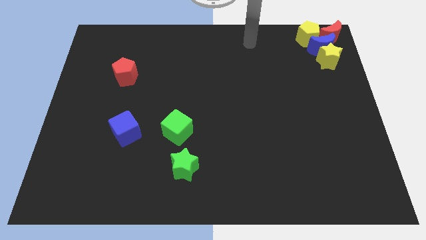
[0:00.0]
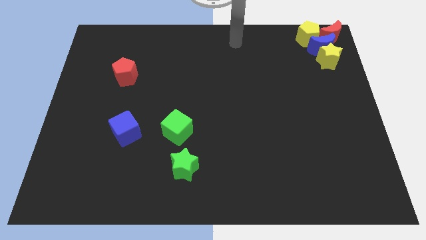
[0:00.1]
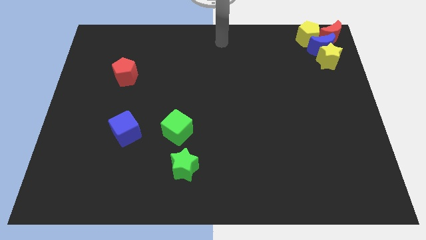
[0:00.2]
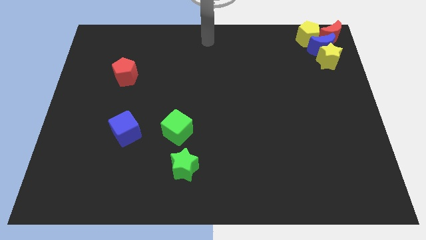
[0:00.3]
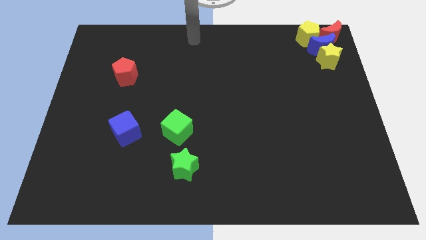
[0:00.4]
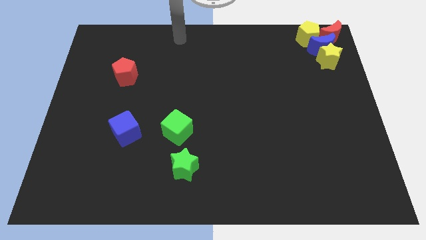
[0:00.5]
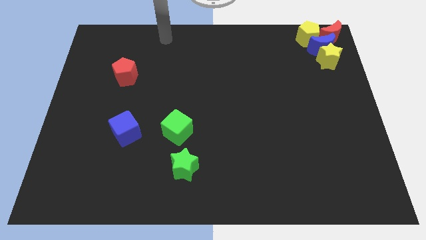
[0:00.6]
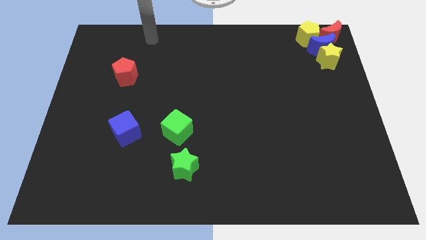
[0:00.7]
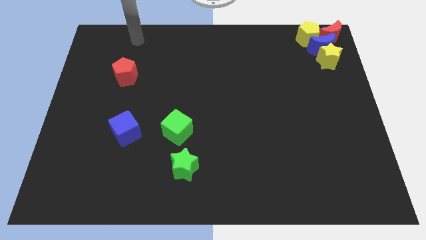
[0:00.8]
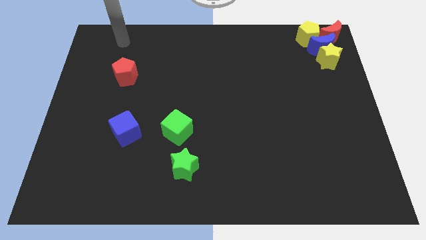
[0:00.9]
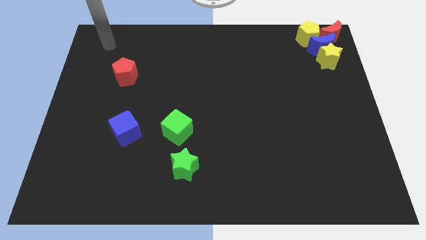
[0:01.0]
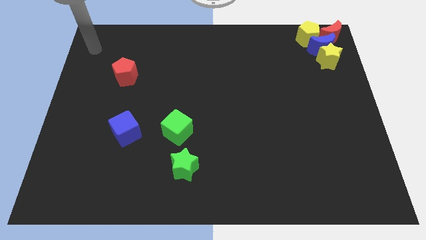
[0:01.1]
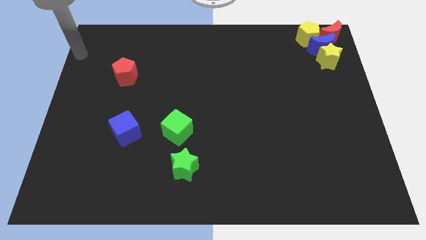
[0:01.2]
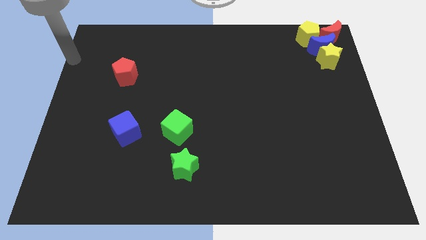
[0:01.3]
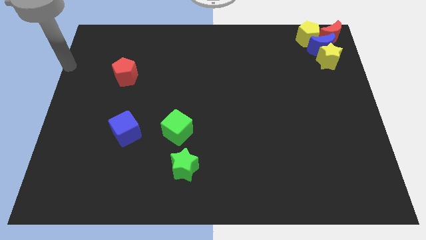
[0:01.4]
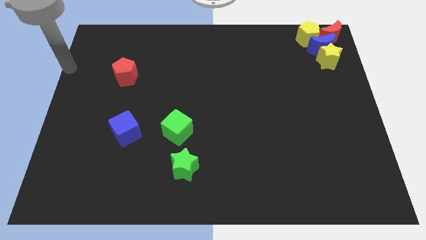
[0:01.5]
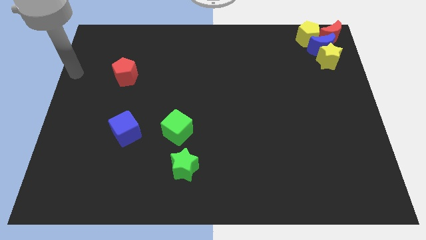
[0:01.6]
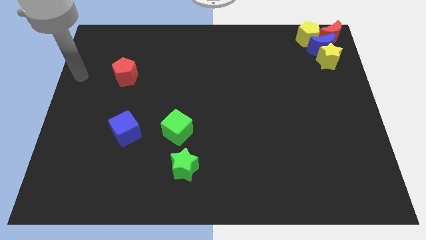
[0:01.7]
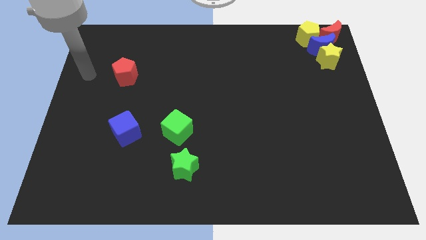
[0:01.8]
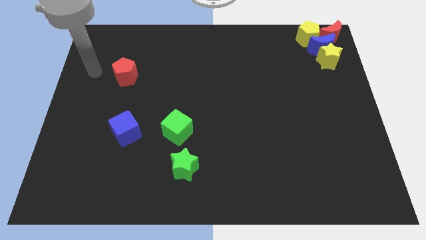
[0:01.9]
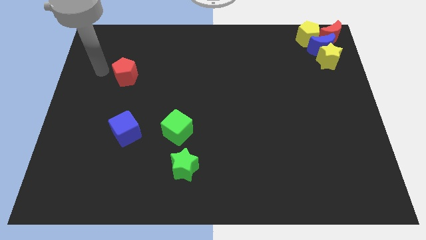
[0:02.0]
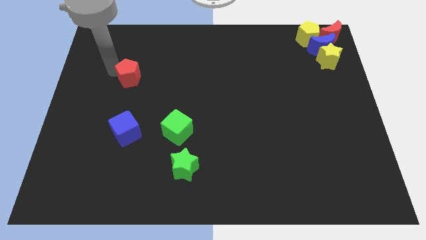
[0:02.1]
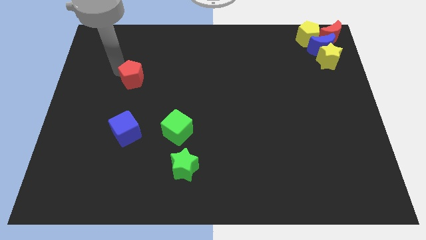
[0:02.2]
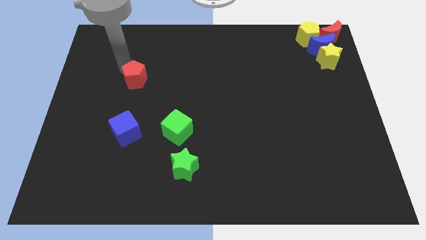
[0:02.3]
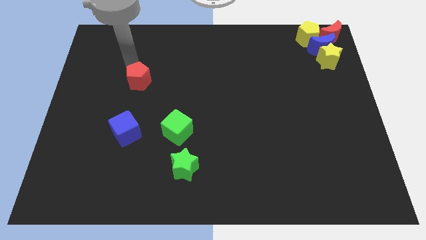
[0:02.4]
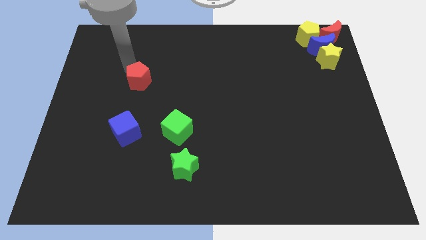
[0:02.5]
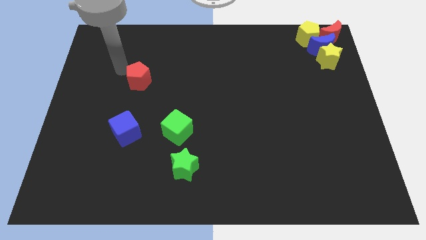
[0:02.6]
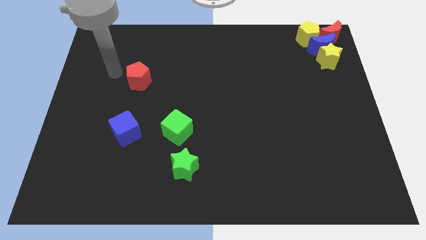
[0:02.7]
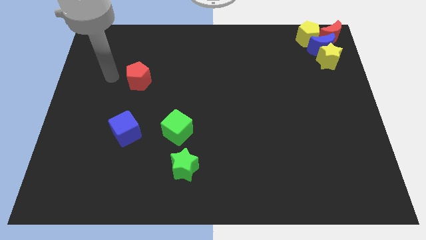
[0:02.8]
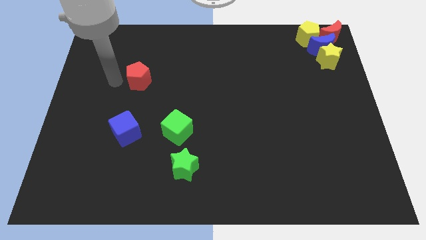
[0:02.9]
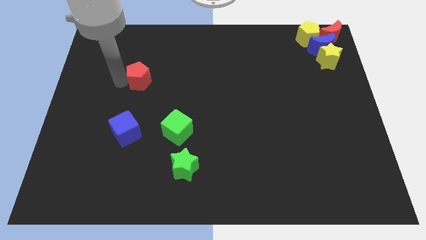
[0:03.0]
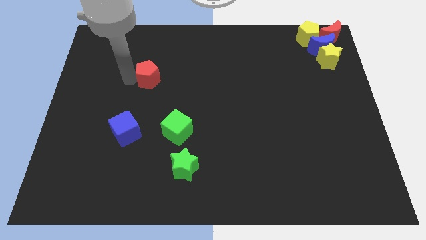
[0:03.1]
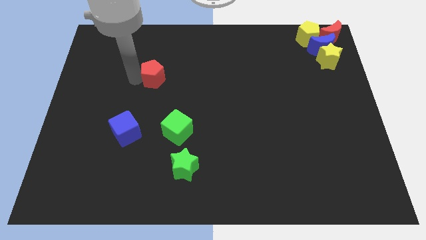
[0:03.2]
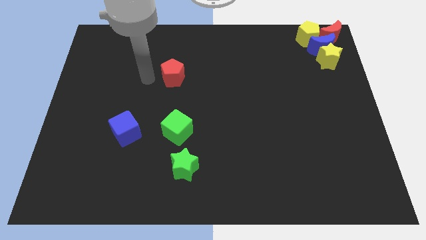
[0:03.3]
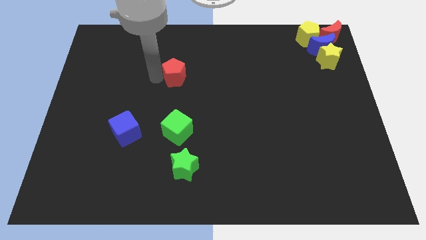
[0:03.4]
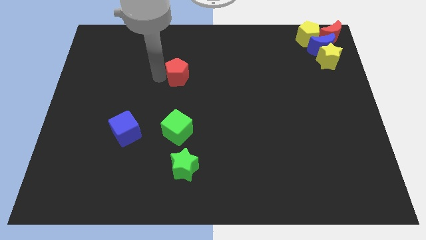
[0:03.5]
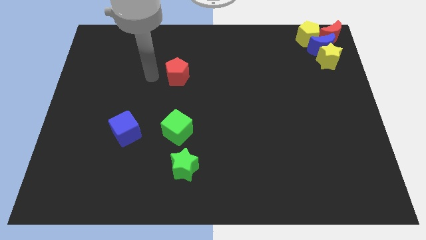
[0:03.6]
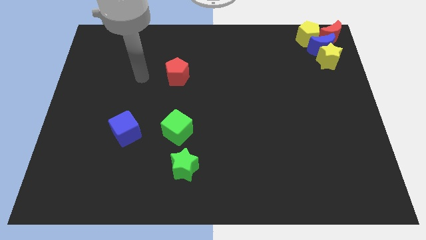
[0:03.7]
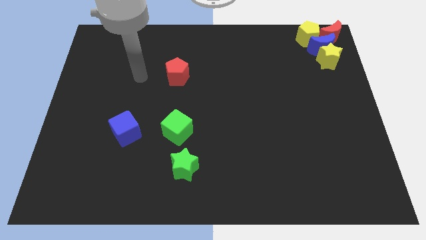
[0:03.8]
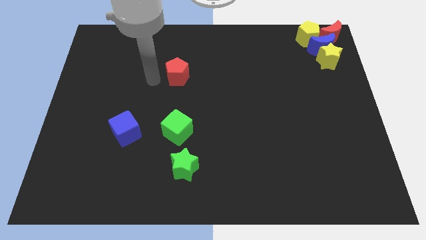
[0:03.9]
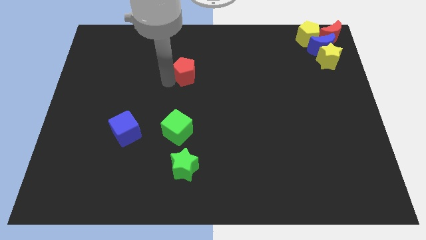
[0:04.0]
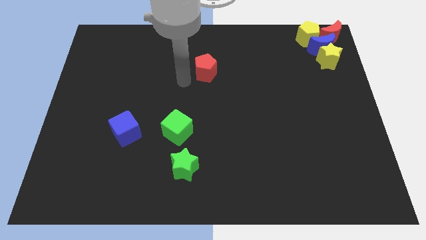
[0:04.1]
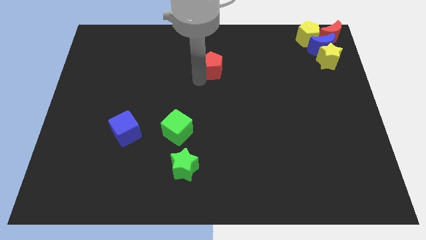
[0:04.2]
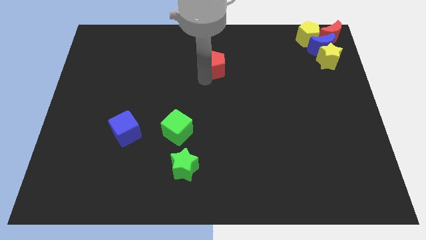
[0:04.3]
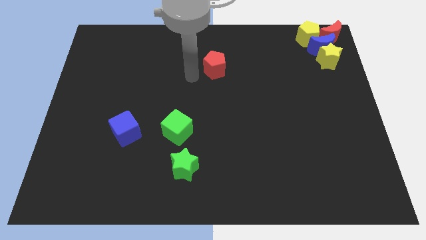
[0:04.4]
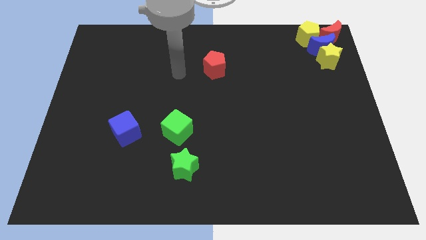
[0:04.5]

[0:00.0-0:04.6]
move the red pentagon to the right of the board

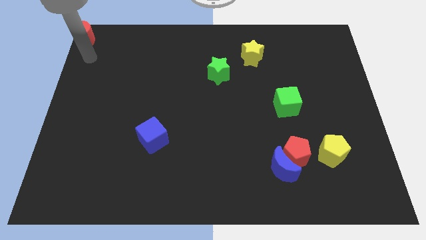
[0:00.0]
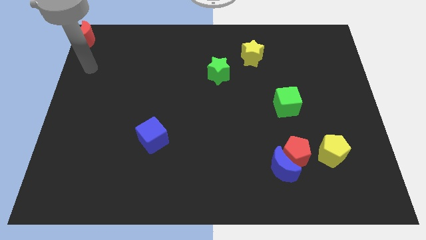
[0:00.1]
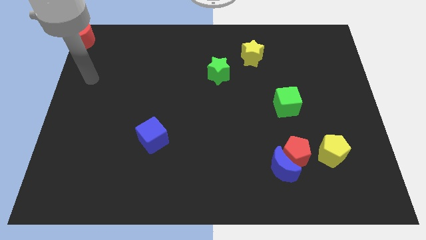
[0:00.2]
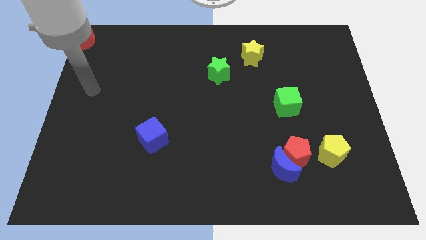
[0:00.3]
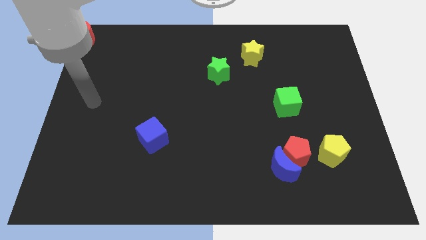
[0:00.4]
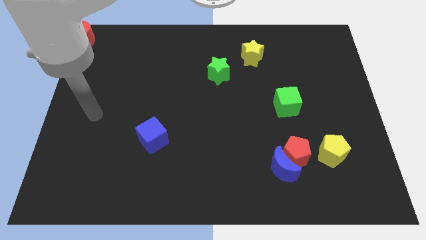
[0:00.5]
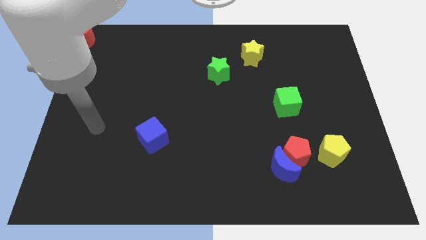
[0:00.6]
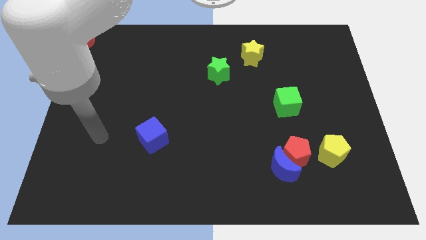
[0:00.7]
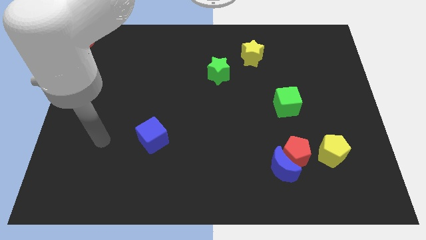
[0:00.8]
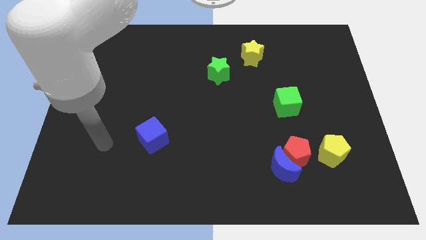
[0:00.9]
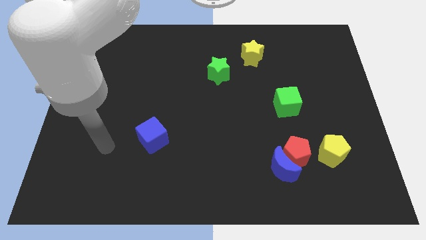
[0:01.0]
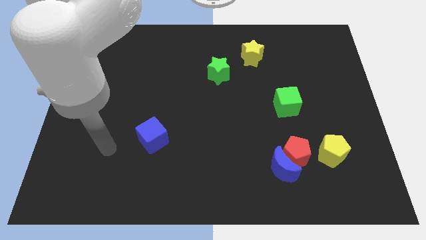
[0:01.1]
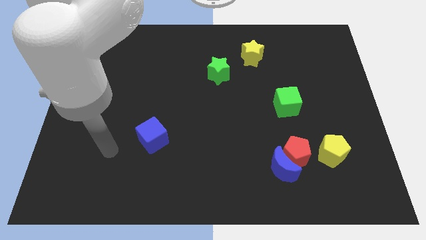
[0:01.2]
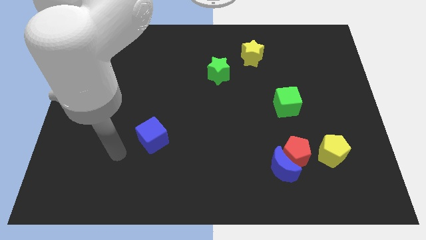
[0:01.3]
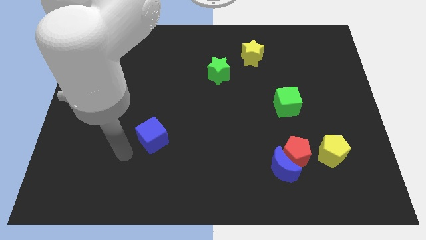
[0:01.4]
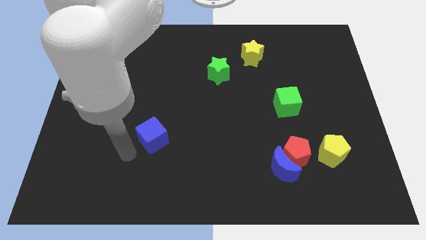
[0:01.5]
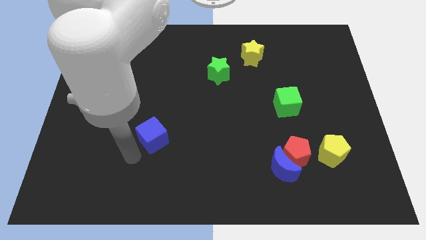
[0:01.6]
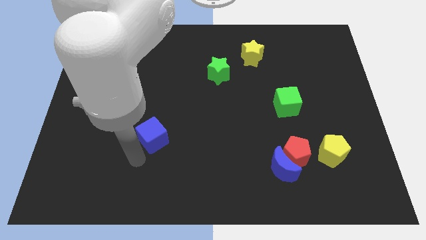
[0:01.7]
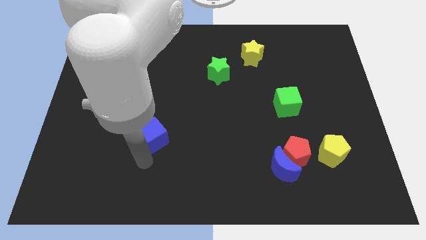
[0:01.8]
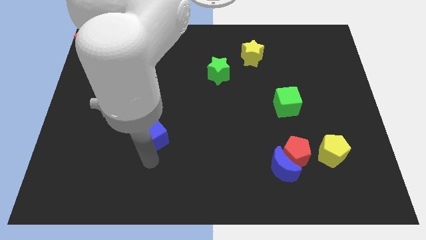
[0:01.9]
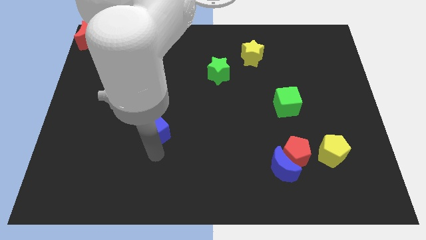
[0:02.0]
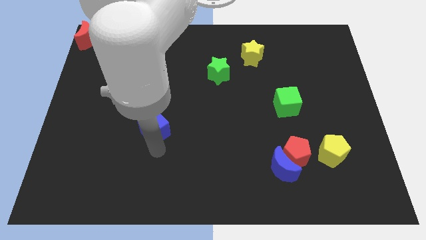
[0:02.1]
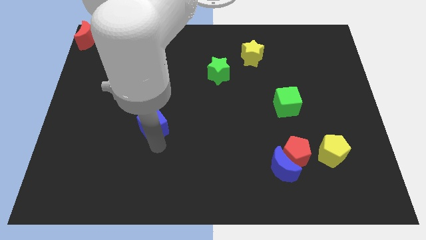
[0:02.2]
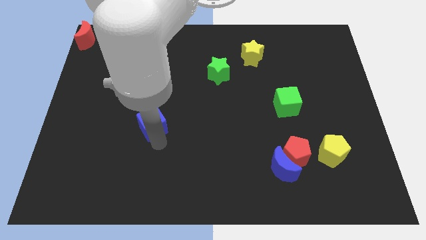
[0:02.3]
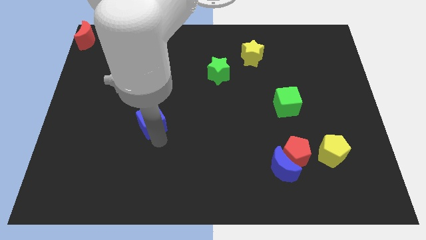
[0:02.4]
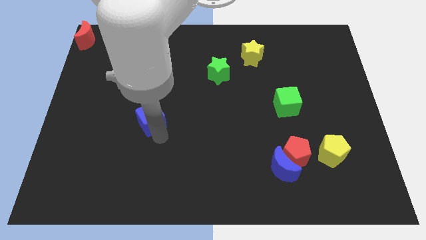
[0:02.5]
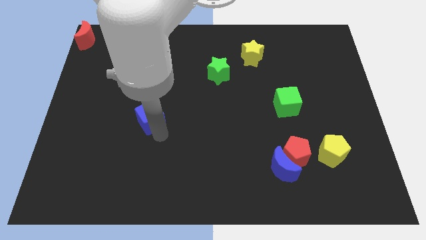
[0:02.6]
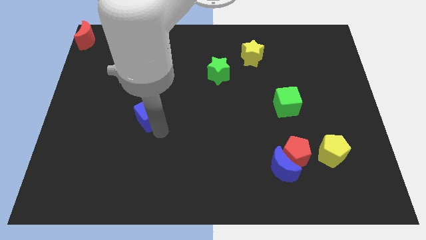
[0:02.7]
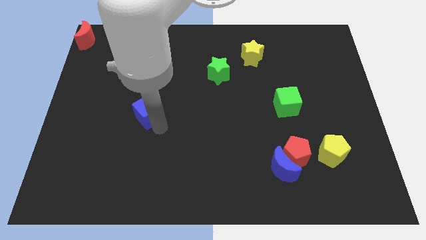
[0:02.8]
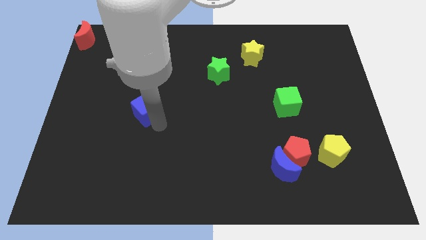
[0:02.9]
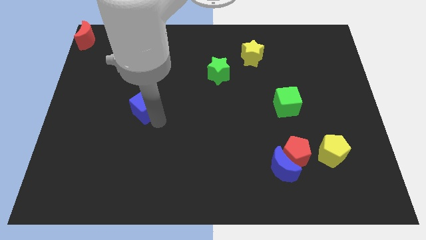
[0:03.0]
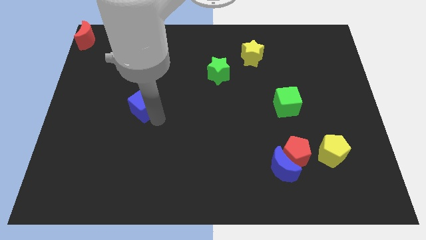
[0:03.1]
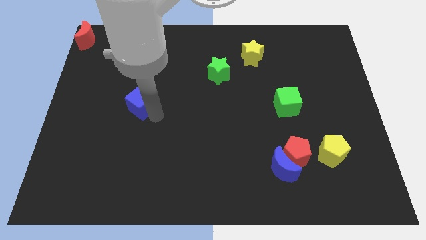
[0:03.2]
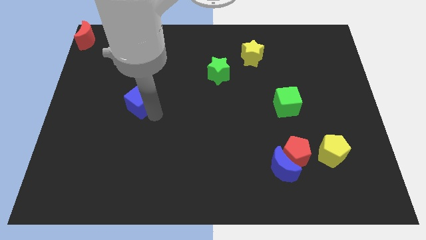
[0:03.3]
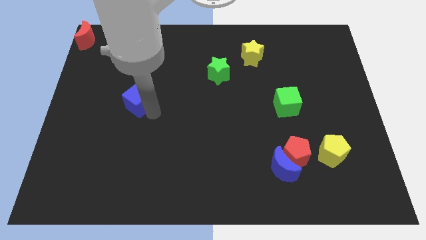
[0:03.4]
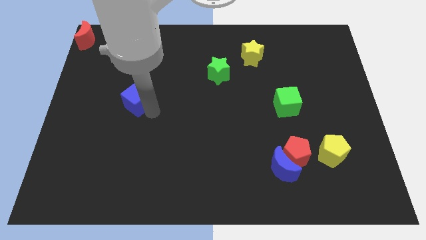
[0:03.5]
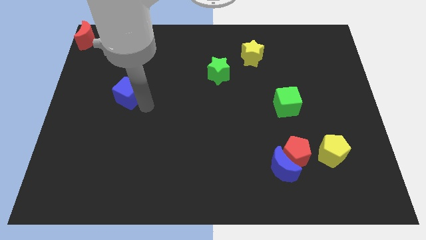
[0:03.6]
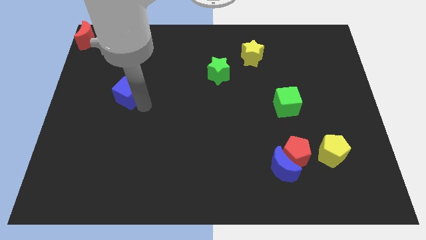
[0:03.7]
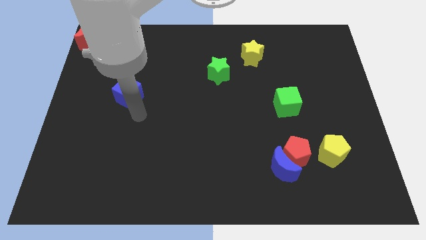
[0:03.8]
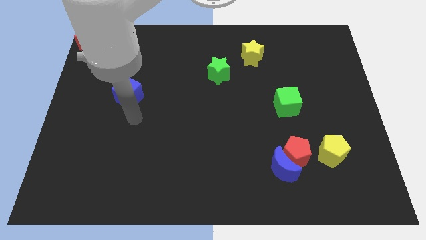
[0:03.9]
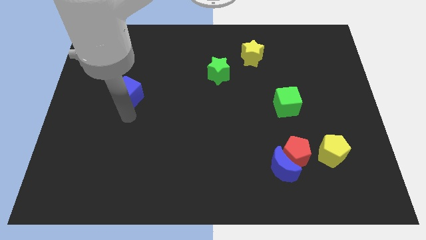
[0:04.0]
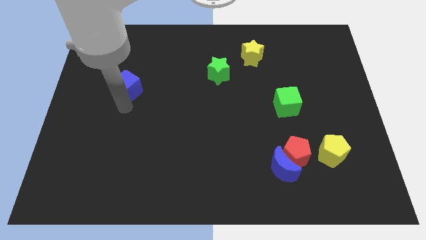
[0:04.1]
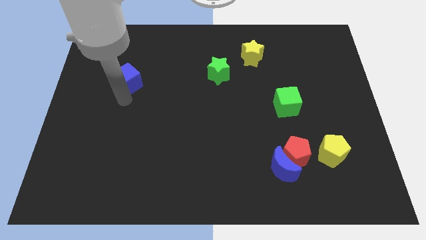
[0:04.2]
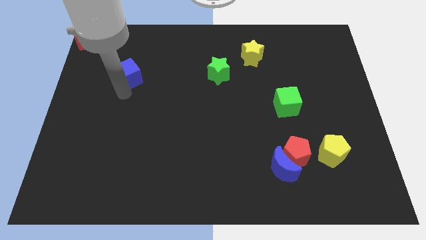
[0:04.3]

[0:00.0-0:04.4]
push the blue cube to the top of the board
